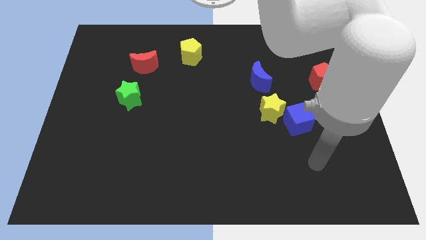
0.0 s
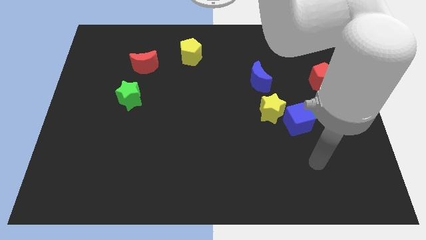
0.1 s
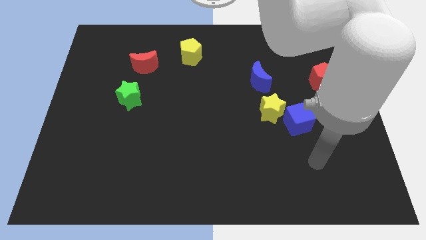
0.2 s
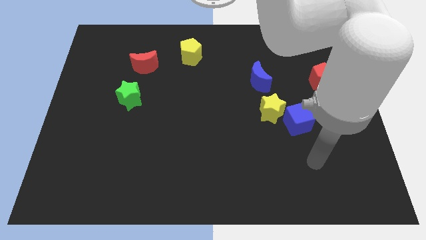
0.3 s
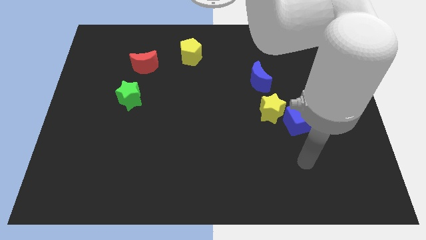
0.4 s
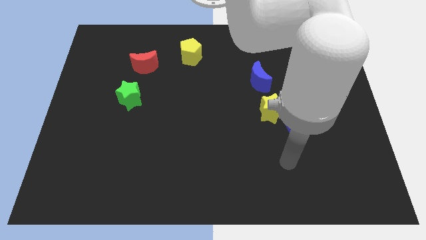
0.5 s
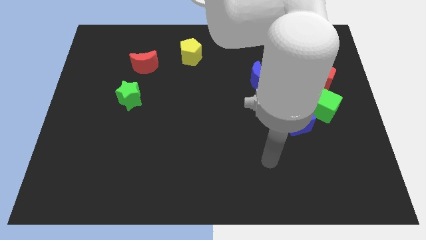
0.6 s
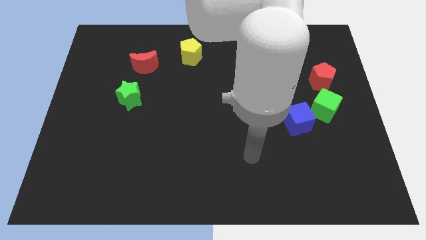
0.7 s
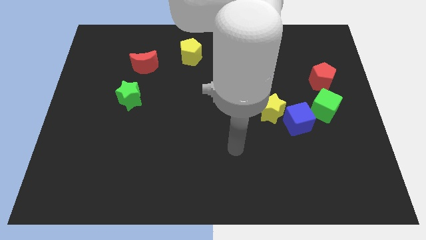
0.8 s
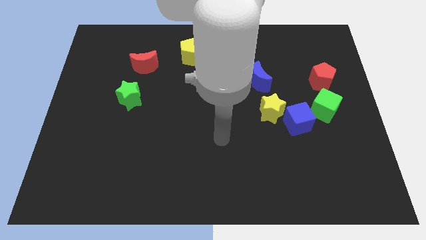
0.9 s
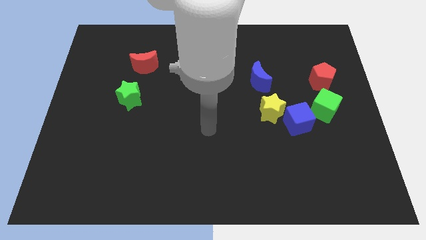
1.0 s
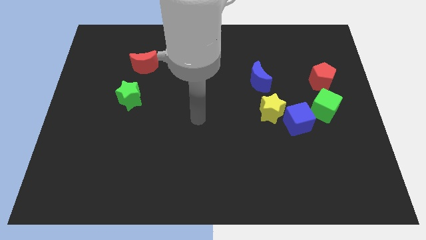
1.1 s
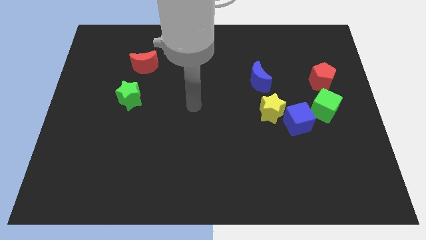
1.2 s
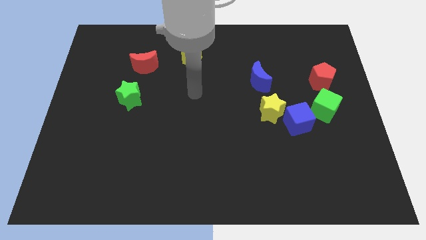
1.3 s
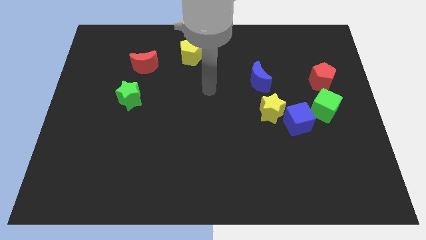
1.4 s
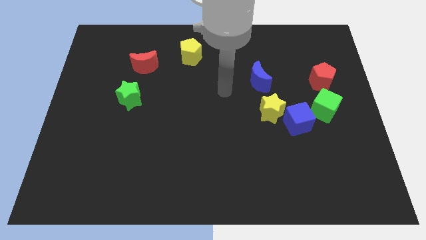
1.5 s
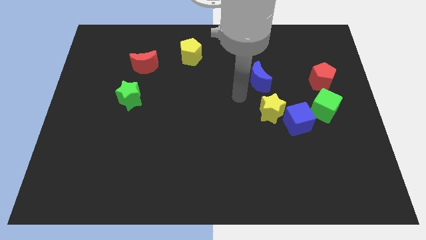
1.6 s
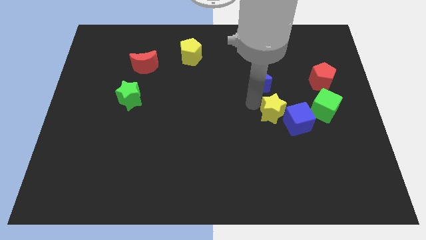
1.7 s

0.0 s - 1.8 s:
move your arm towards the yellow star

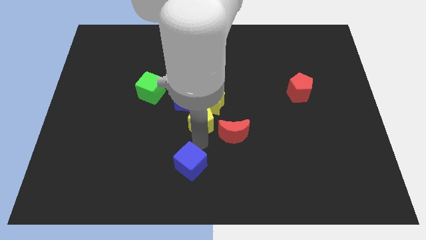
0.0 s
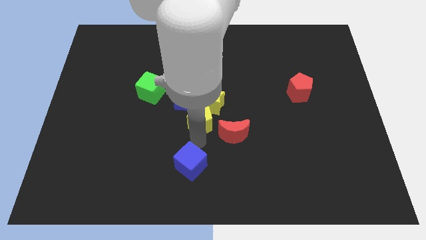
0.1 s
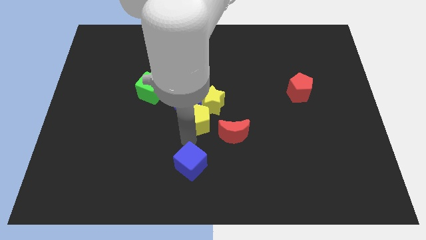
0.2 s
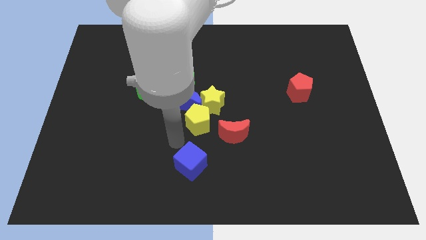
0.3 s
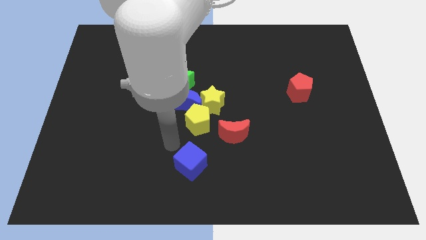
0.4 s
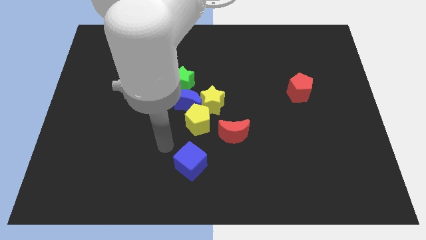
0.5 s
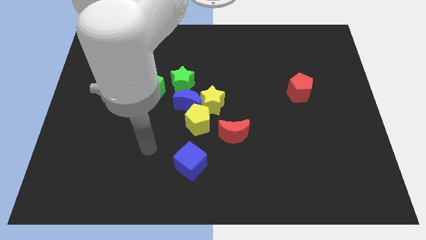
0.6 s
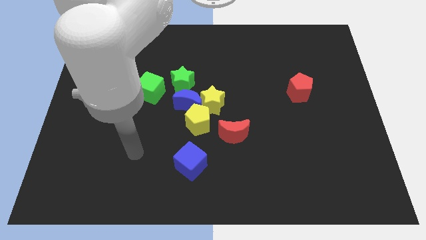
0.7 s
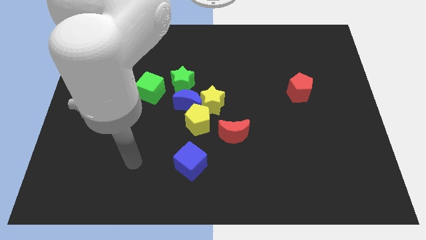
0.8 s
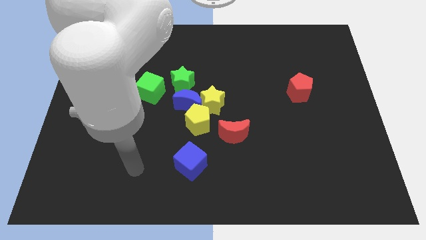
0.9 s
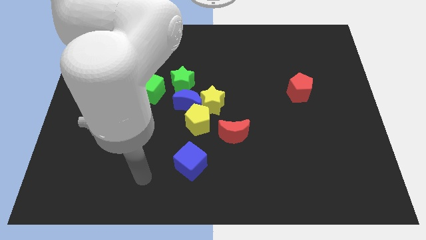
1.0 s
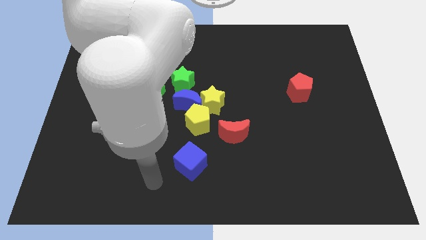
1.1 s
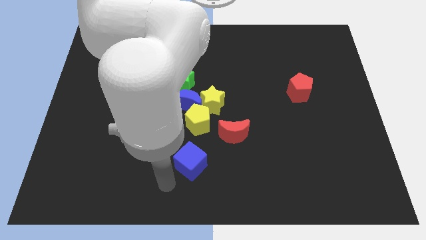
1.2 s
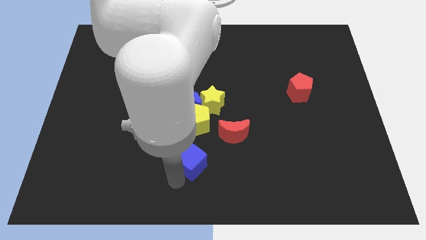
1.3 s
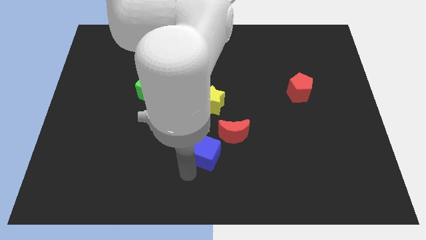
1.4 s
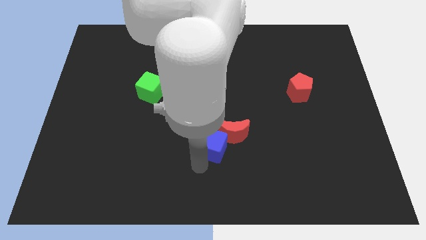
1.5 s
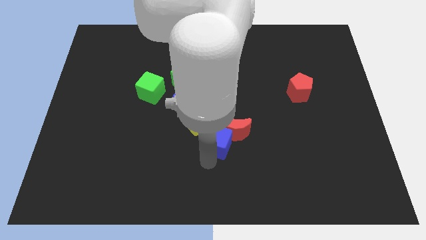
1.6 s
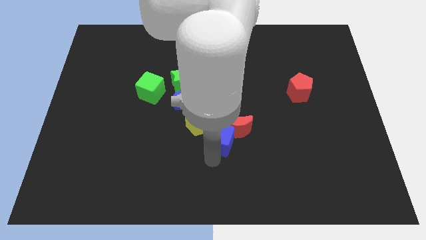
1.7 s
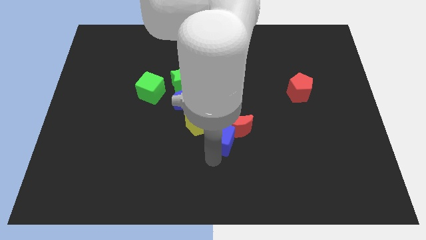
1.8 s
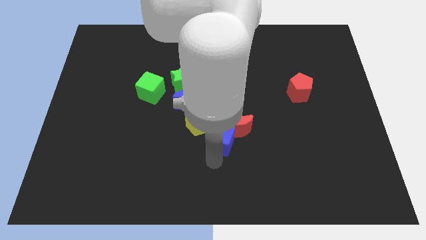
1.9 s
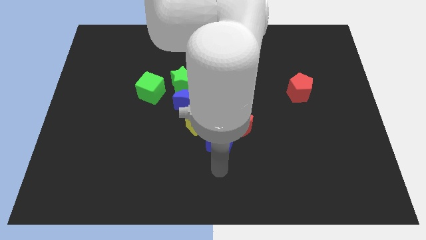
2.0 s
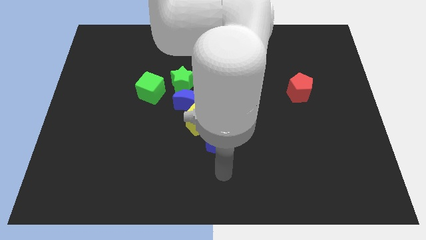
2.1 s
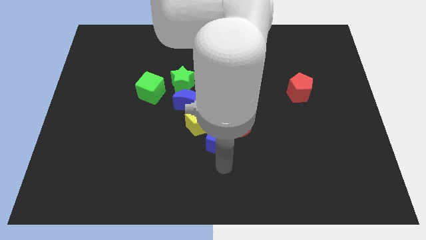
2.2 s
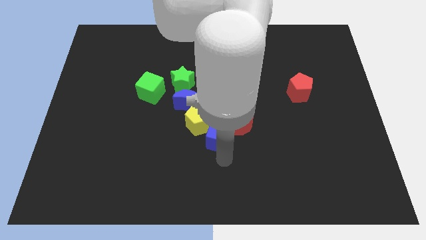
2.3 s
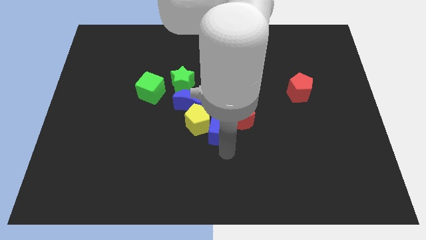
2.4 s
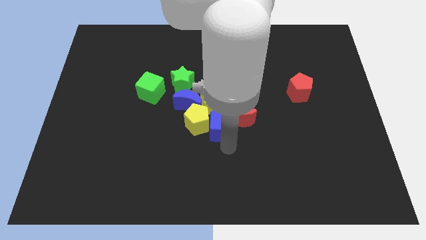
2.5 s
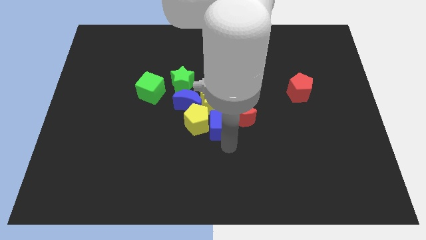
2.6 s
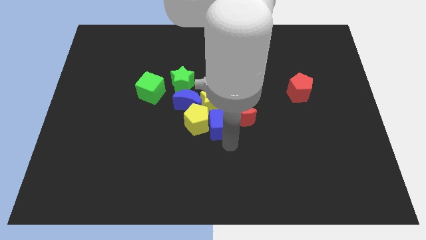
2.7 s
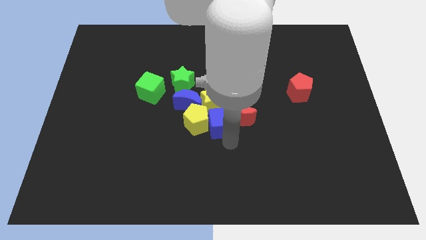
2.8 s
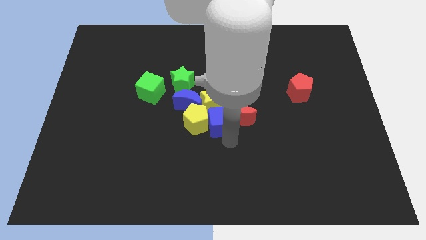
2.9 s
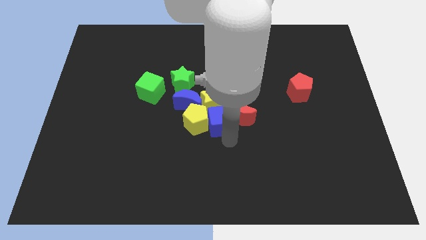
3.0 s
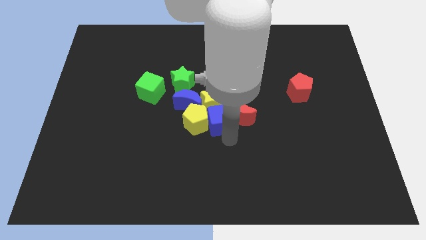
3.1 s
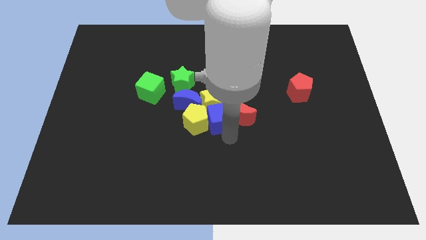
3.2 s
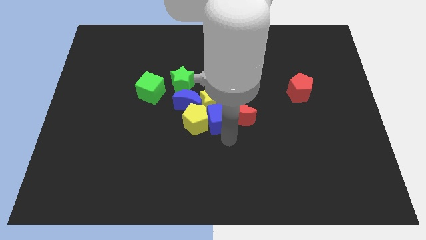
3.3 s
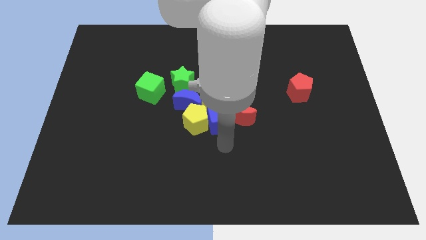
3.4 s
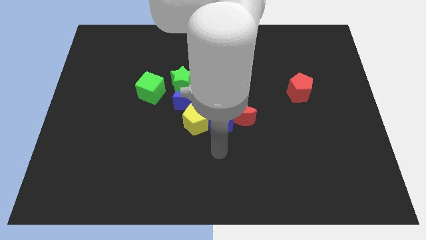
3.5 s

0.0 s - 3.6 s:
push the blue cube into the yellow star

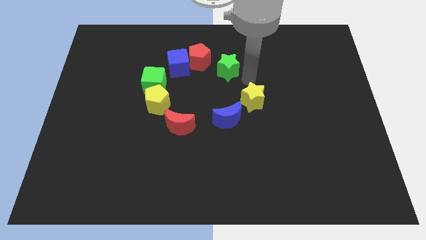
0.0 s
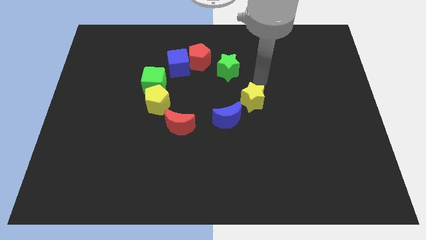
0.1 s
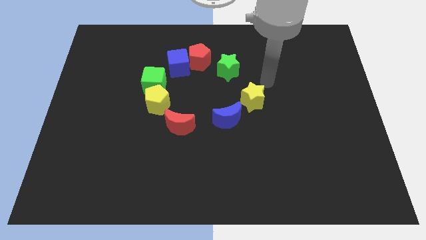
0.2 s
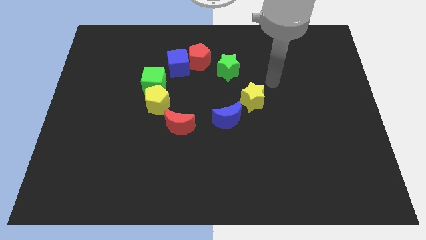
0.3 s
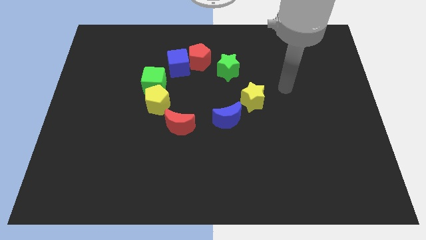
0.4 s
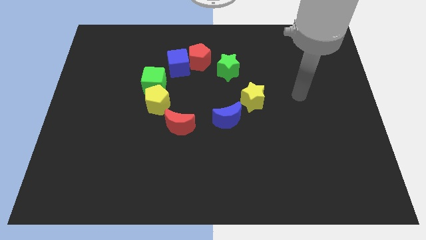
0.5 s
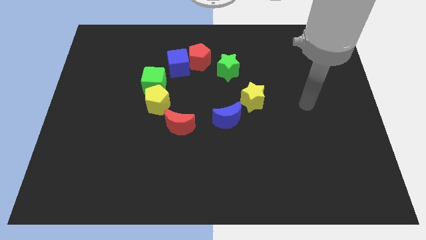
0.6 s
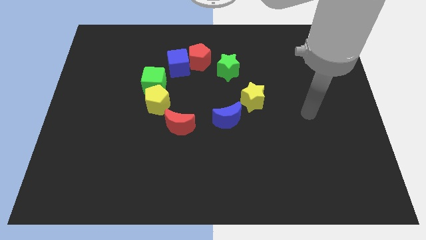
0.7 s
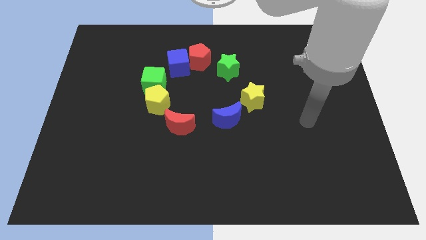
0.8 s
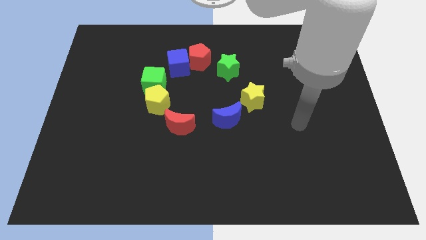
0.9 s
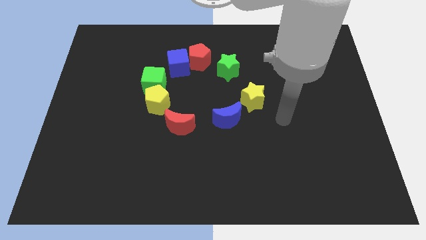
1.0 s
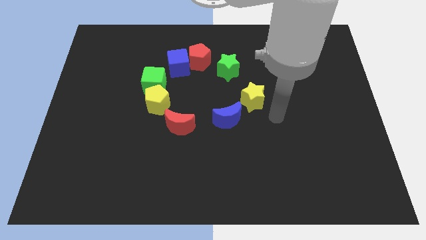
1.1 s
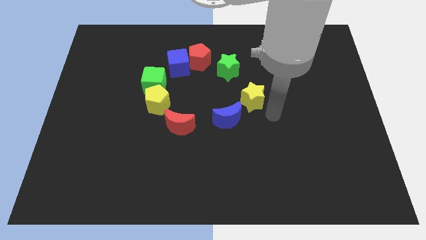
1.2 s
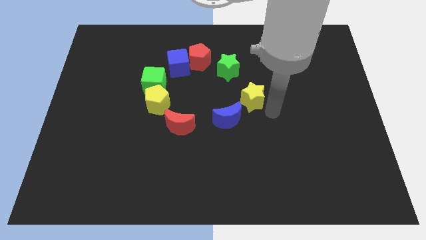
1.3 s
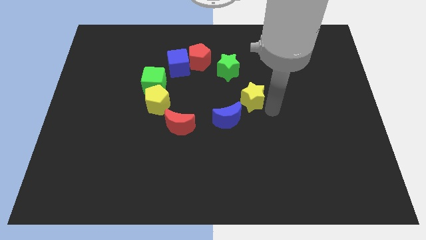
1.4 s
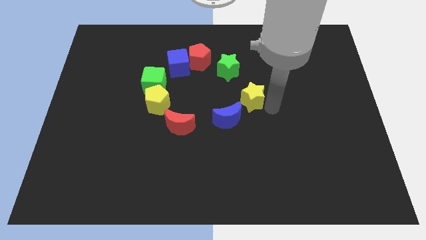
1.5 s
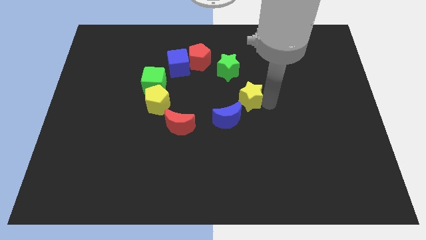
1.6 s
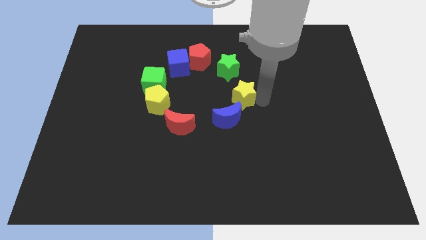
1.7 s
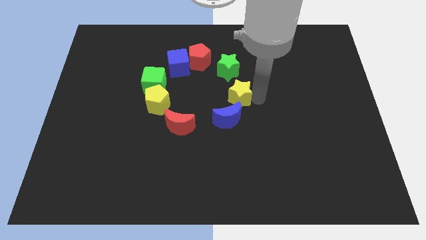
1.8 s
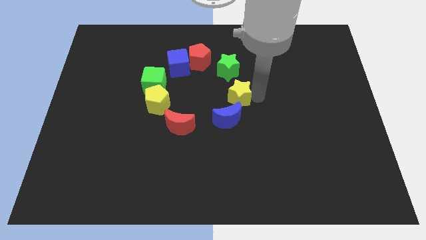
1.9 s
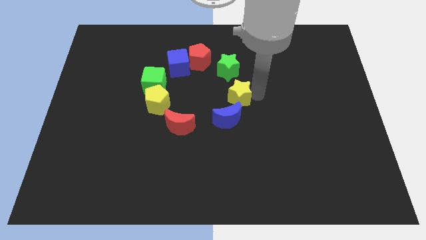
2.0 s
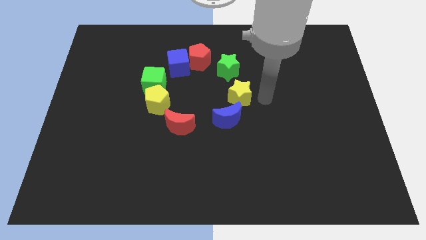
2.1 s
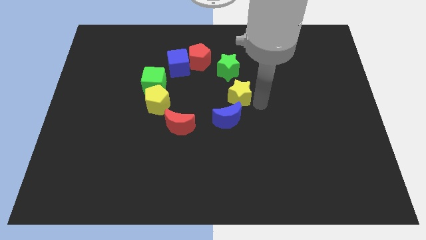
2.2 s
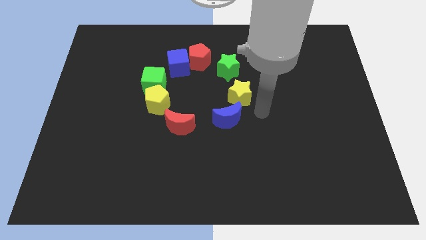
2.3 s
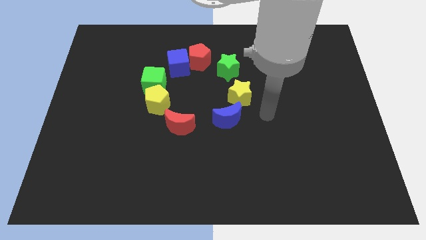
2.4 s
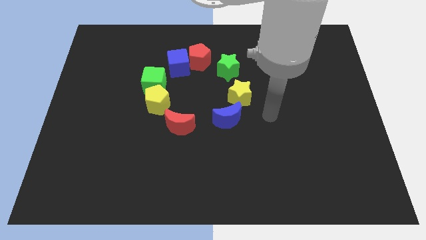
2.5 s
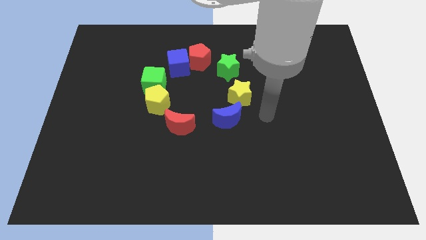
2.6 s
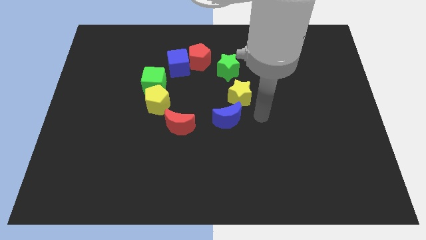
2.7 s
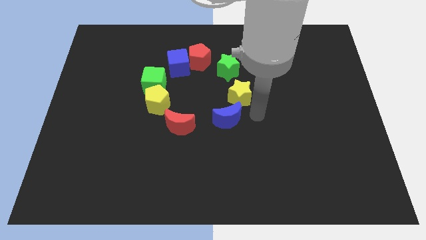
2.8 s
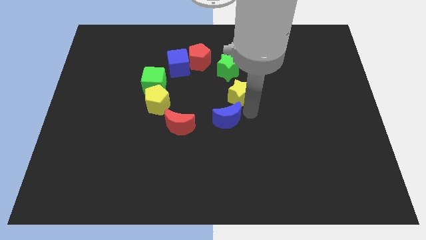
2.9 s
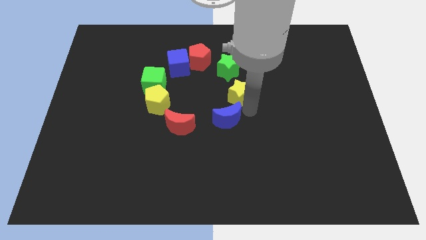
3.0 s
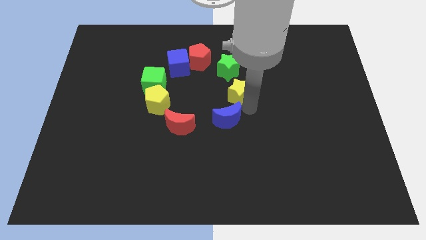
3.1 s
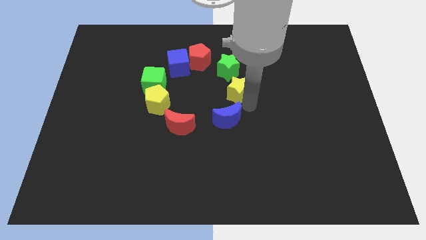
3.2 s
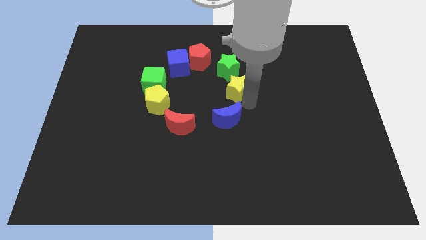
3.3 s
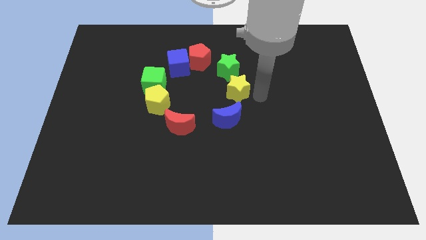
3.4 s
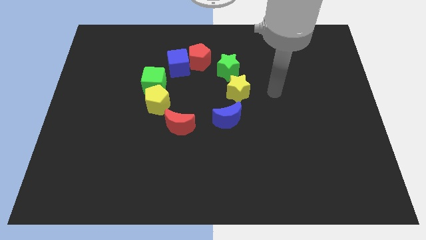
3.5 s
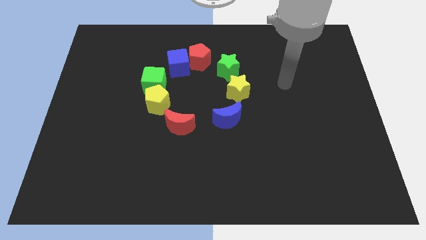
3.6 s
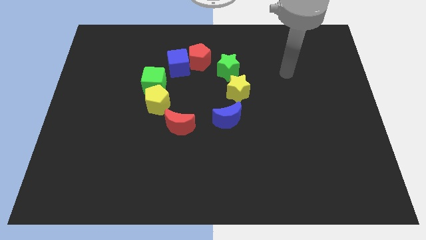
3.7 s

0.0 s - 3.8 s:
move the yellow star close to the green star
